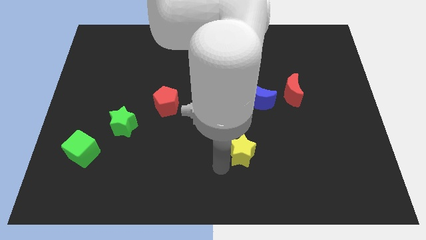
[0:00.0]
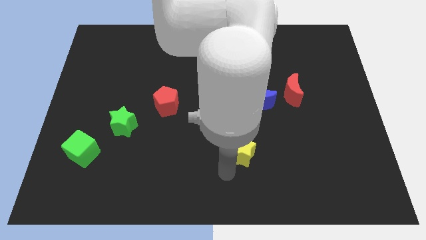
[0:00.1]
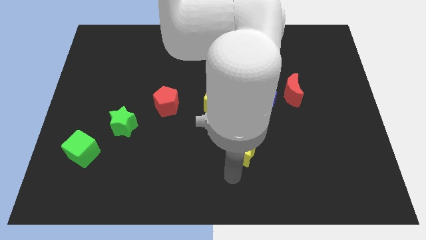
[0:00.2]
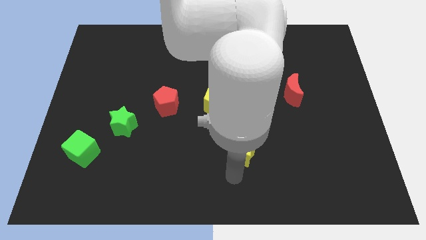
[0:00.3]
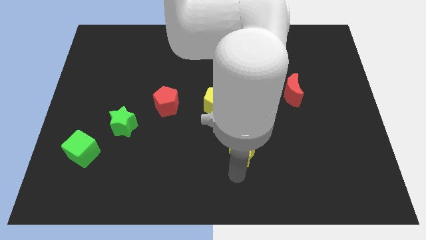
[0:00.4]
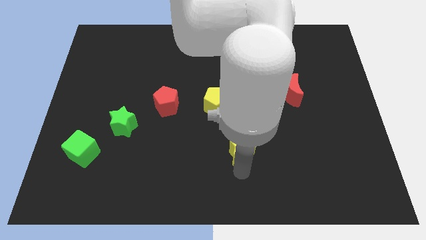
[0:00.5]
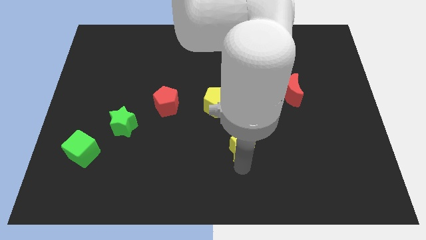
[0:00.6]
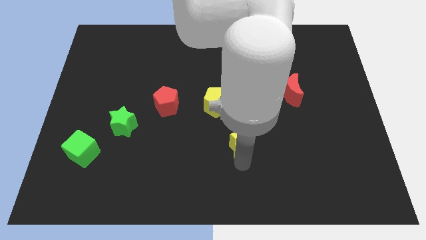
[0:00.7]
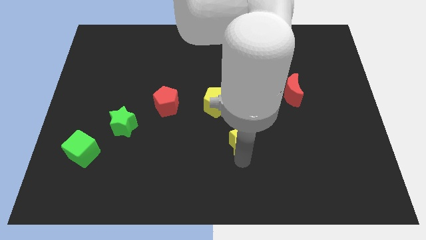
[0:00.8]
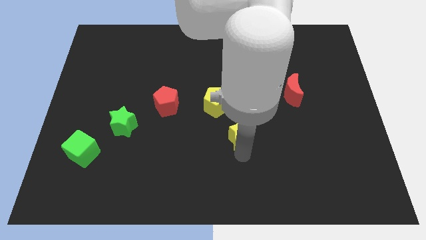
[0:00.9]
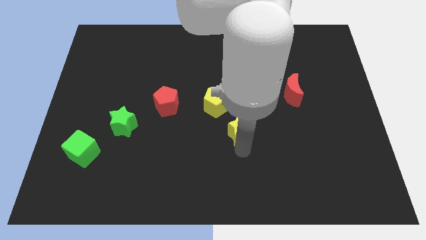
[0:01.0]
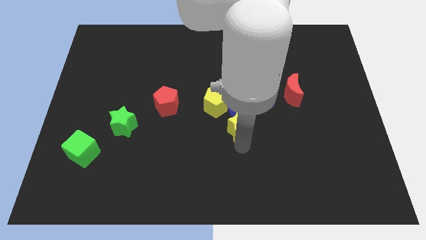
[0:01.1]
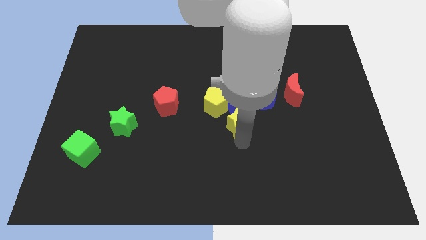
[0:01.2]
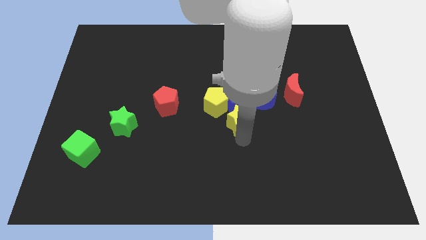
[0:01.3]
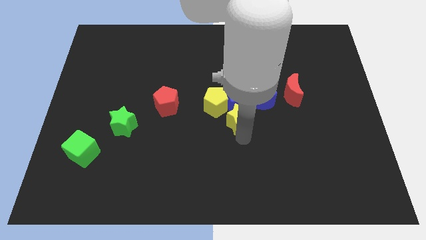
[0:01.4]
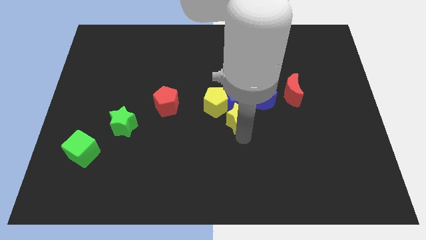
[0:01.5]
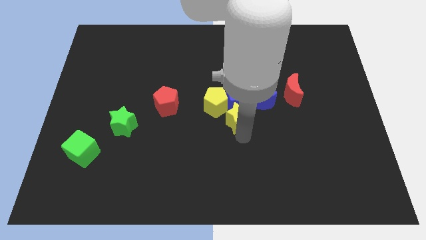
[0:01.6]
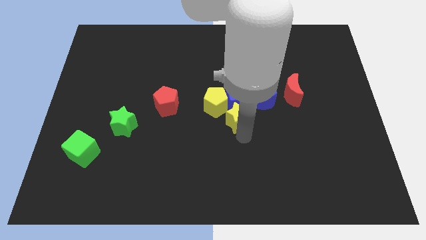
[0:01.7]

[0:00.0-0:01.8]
move the yellow star into the blue cube

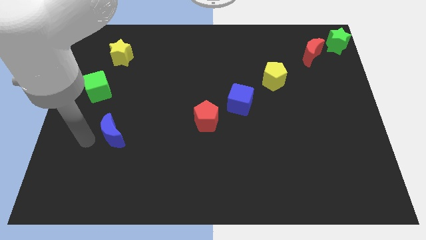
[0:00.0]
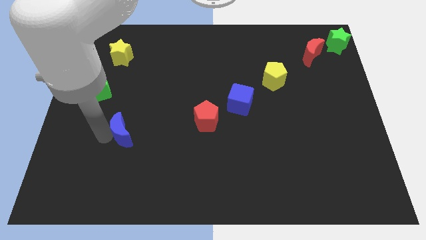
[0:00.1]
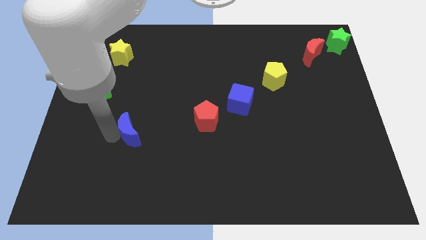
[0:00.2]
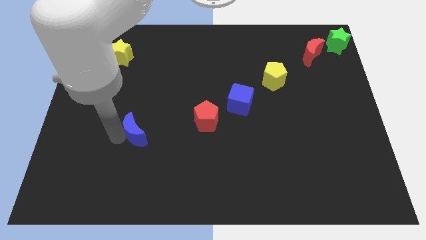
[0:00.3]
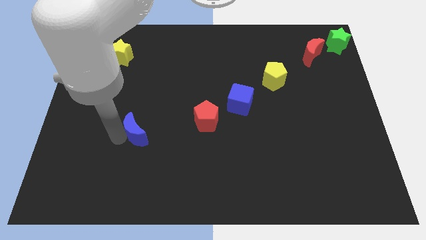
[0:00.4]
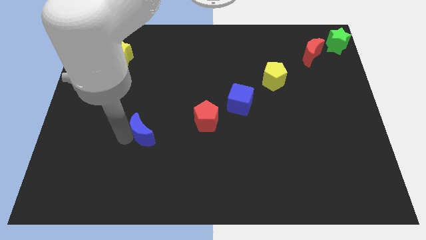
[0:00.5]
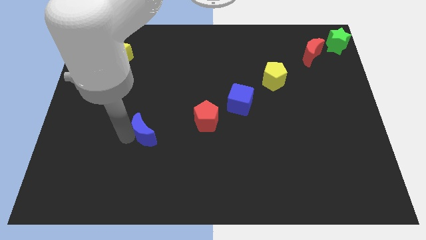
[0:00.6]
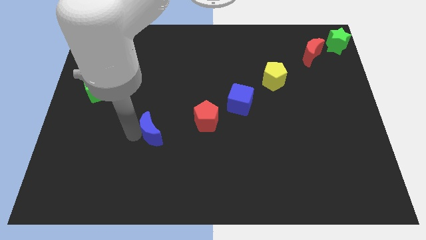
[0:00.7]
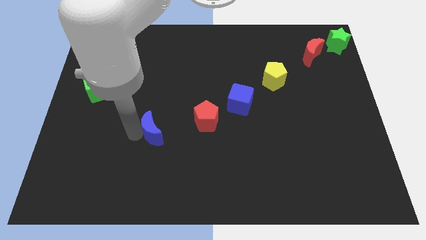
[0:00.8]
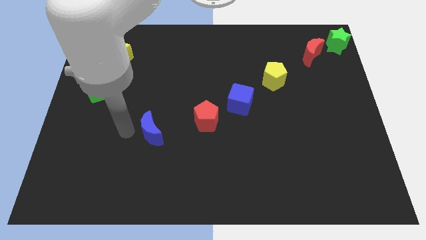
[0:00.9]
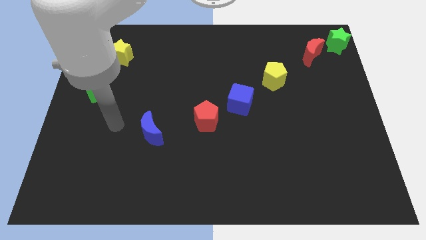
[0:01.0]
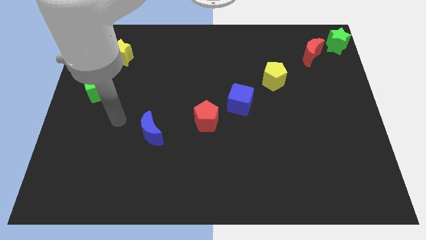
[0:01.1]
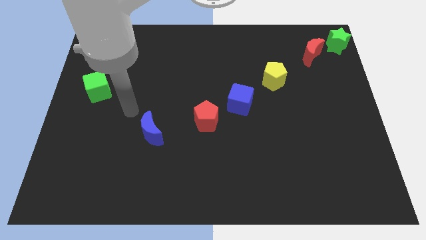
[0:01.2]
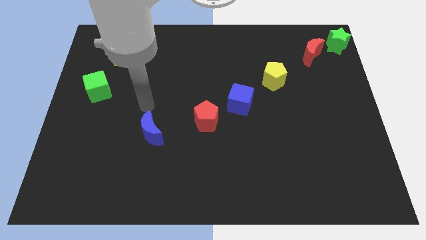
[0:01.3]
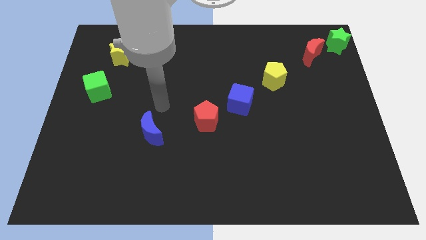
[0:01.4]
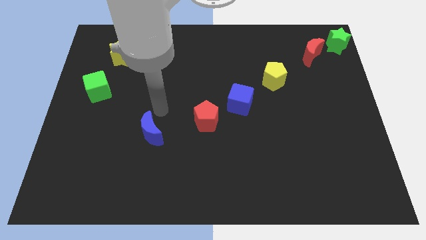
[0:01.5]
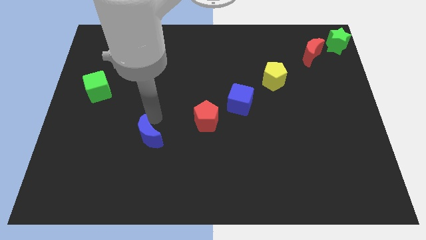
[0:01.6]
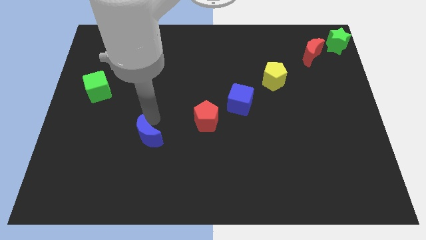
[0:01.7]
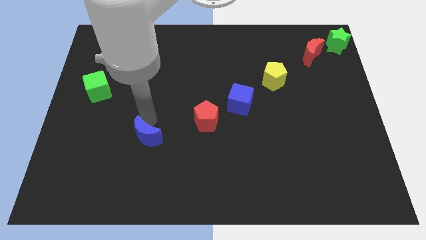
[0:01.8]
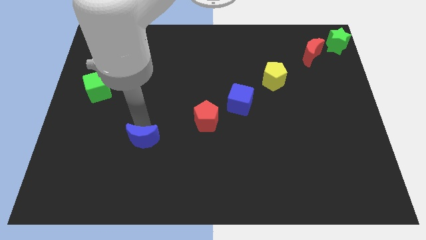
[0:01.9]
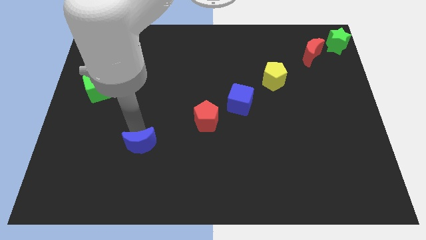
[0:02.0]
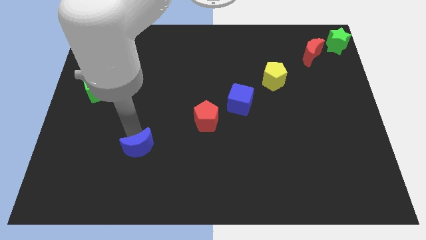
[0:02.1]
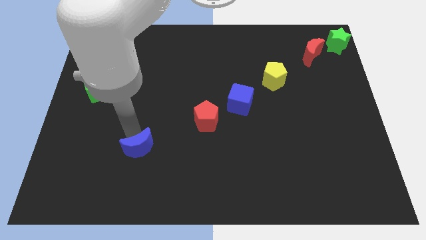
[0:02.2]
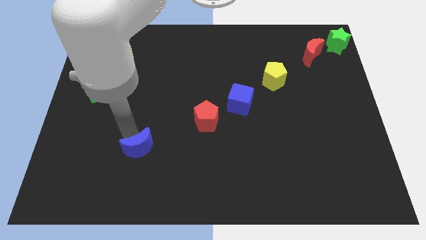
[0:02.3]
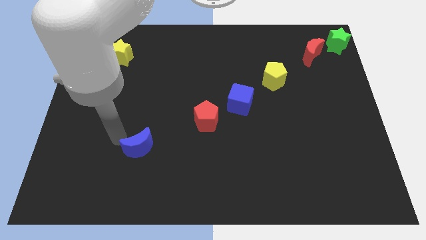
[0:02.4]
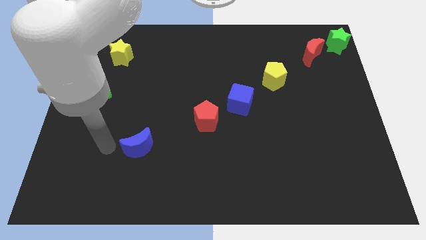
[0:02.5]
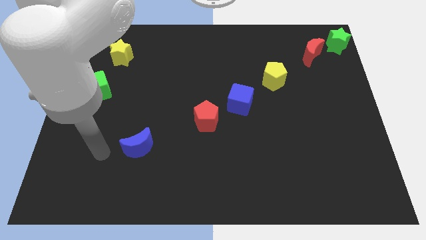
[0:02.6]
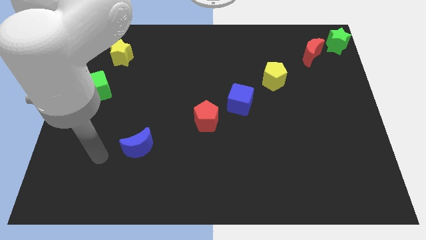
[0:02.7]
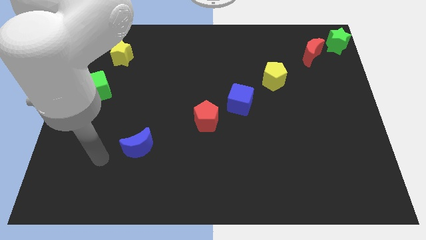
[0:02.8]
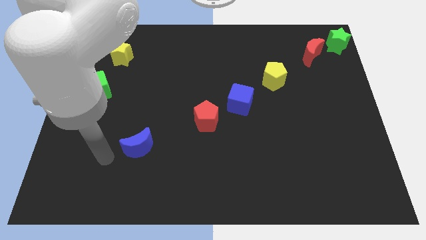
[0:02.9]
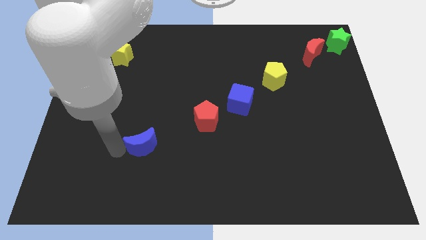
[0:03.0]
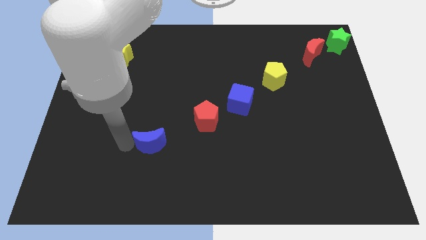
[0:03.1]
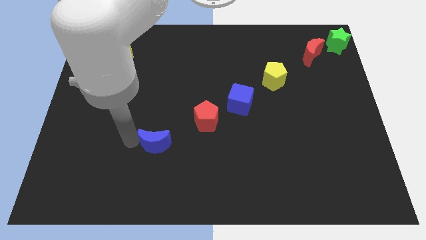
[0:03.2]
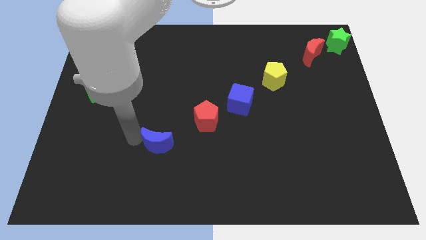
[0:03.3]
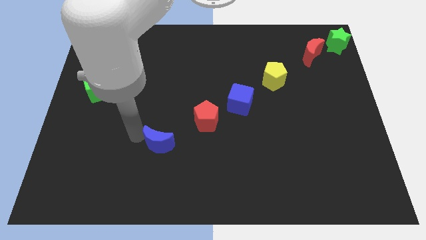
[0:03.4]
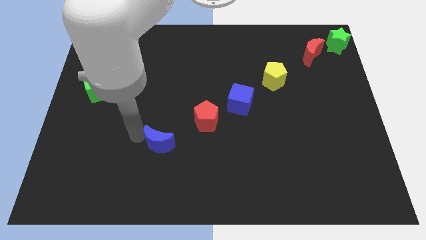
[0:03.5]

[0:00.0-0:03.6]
push the blue crescent diagonal to the red pentagon

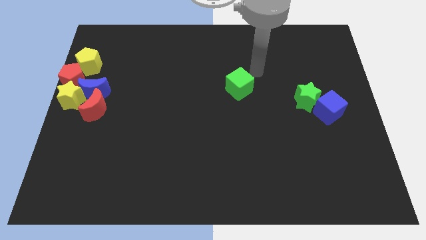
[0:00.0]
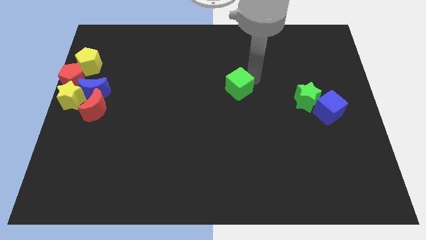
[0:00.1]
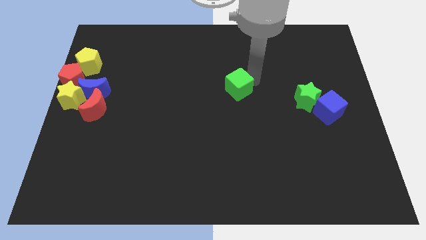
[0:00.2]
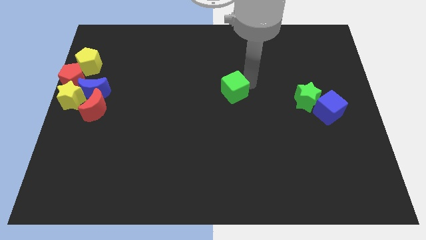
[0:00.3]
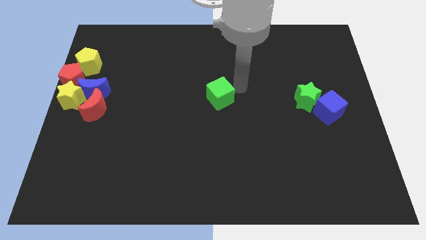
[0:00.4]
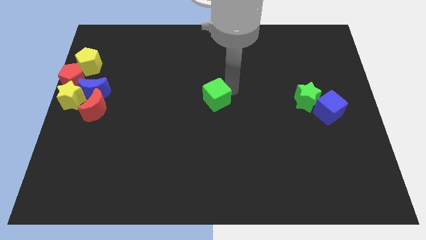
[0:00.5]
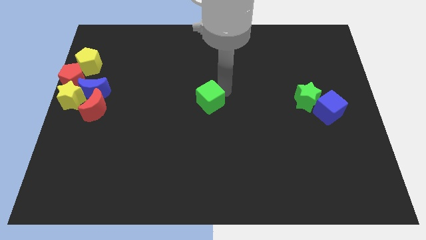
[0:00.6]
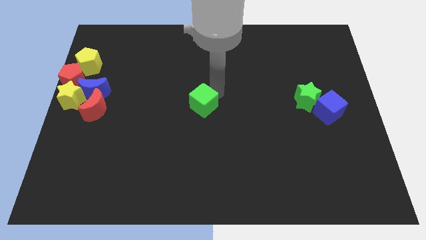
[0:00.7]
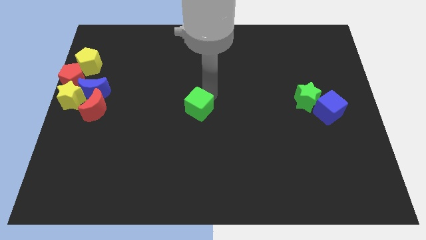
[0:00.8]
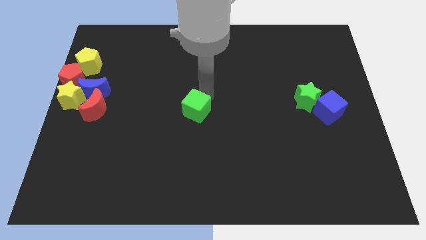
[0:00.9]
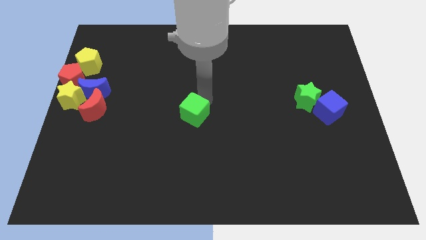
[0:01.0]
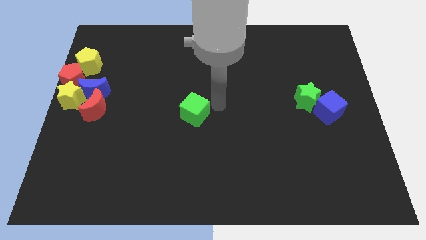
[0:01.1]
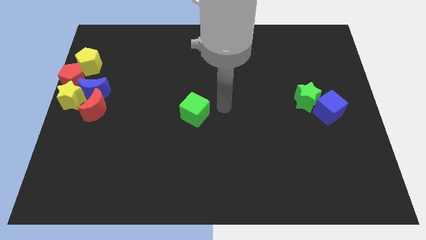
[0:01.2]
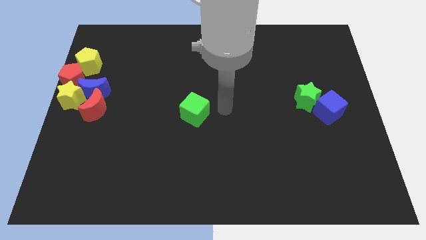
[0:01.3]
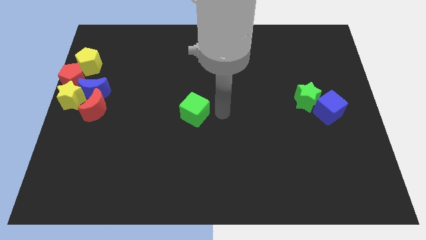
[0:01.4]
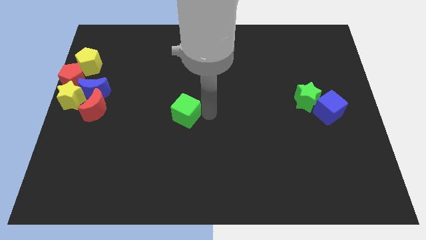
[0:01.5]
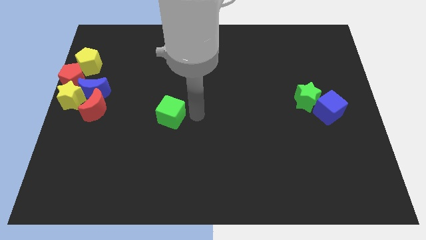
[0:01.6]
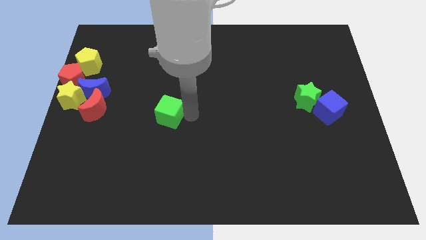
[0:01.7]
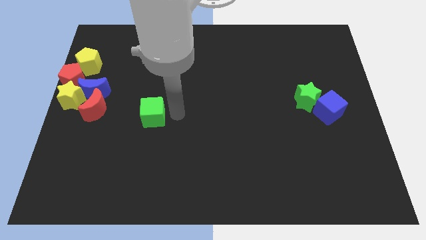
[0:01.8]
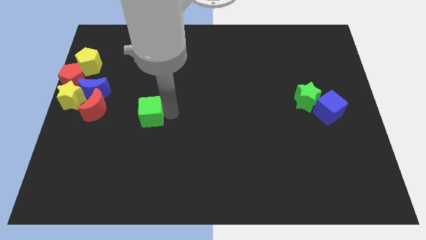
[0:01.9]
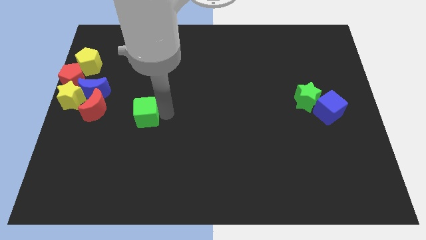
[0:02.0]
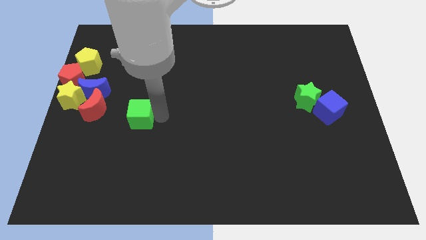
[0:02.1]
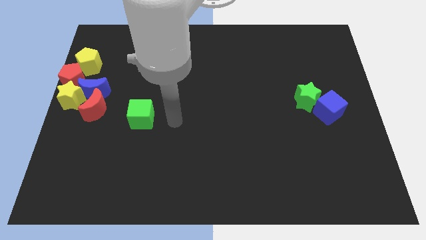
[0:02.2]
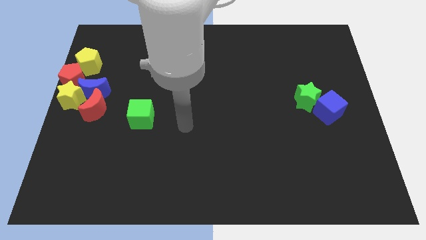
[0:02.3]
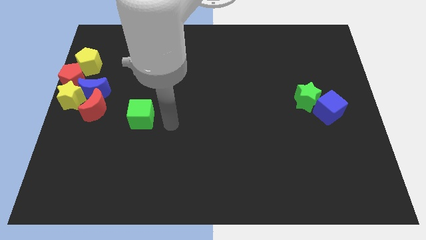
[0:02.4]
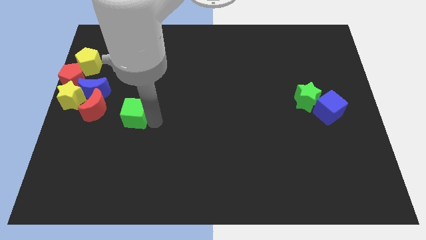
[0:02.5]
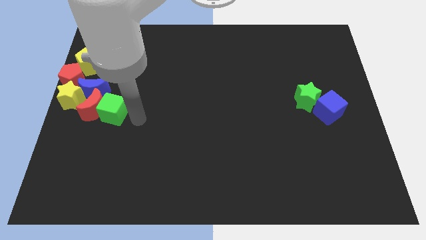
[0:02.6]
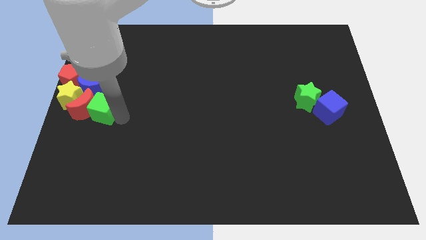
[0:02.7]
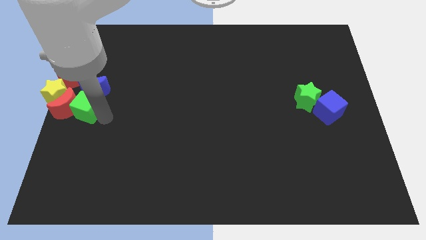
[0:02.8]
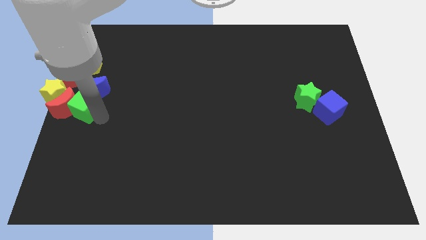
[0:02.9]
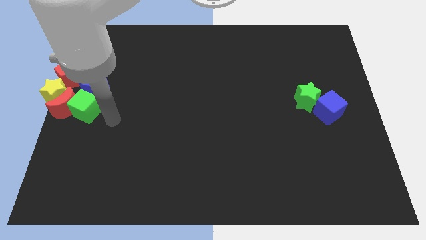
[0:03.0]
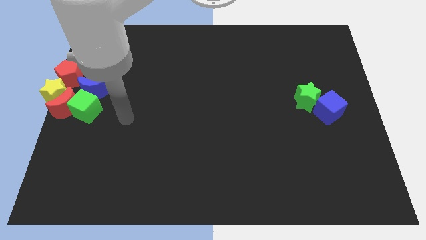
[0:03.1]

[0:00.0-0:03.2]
move the green cube into the red moon

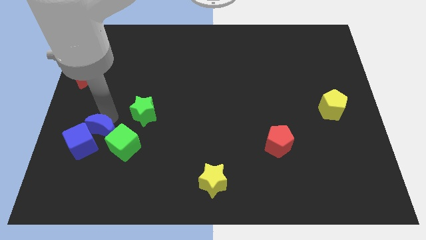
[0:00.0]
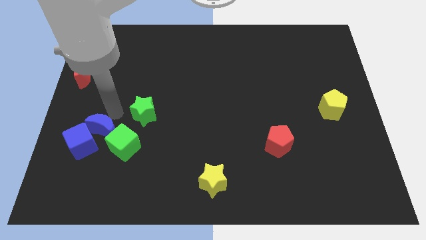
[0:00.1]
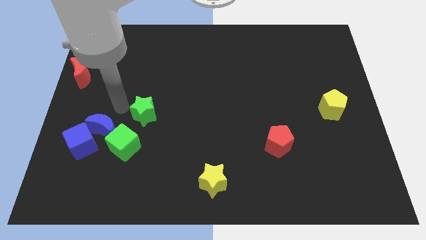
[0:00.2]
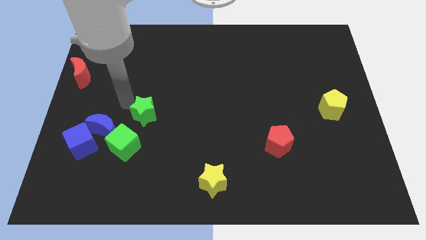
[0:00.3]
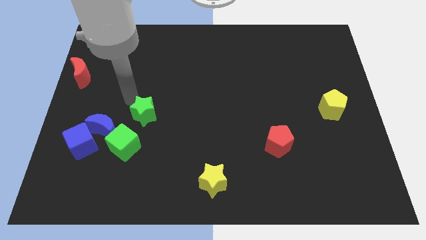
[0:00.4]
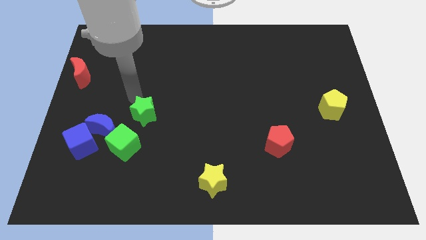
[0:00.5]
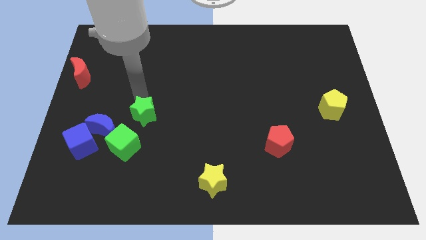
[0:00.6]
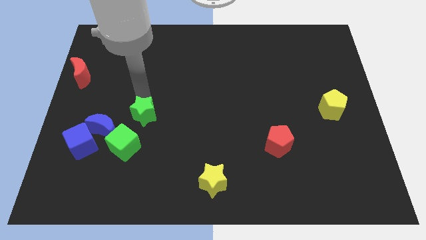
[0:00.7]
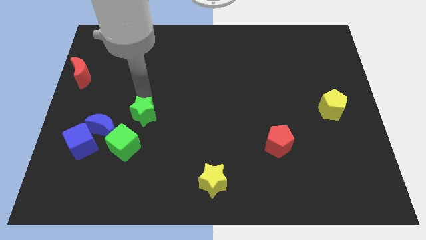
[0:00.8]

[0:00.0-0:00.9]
place the arm above the green star
